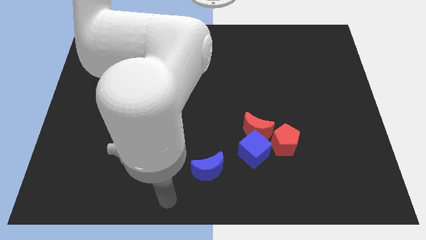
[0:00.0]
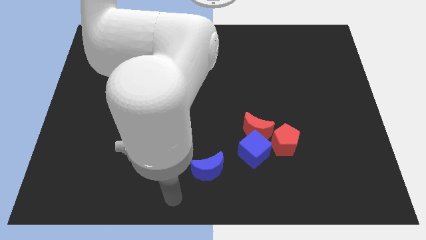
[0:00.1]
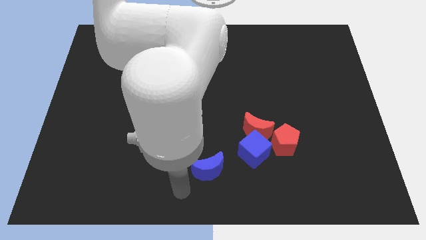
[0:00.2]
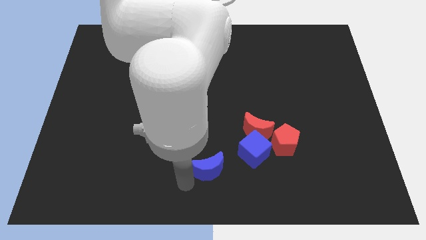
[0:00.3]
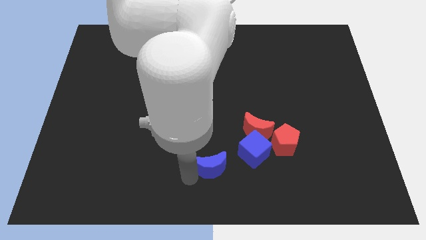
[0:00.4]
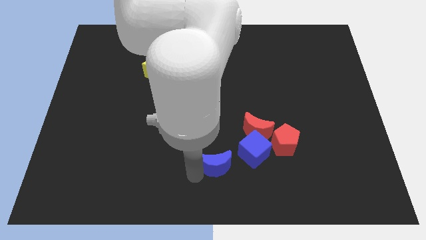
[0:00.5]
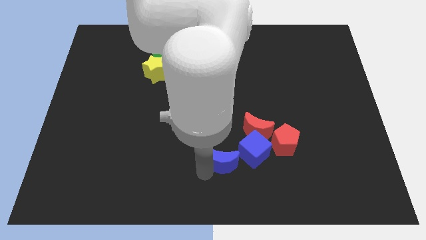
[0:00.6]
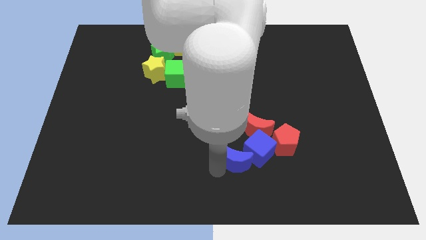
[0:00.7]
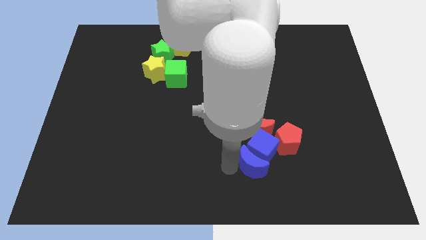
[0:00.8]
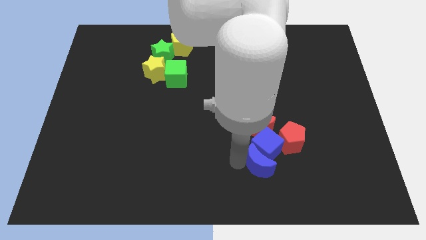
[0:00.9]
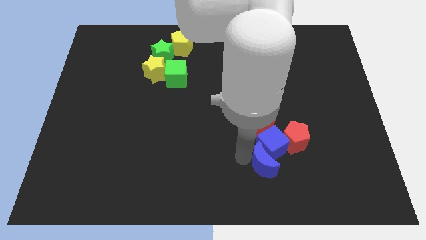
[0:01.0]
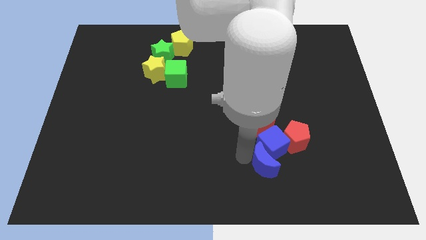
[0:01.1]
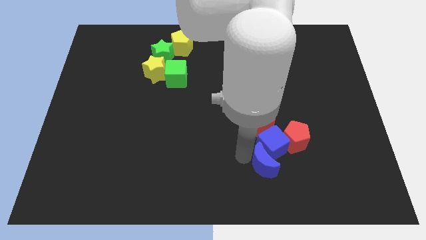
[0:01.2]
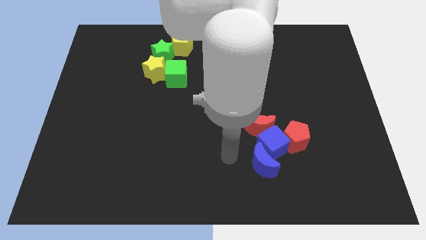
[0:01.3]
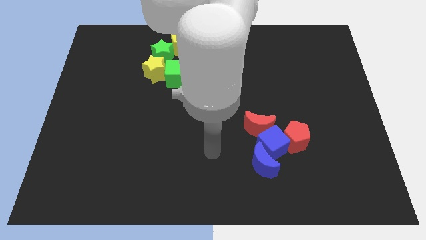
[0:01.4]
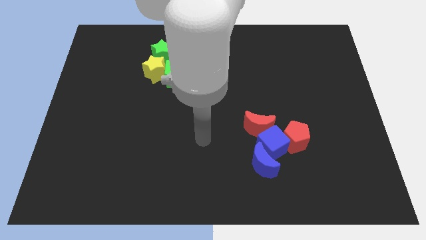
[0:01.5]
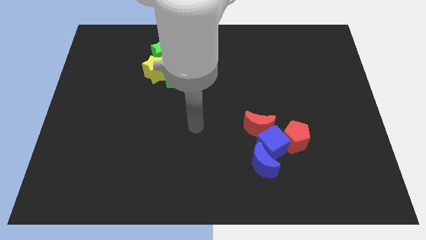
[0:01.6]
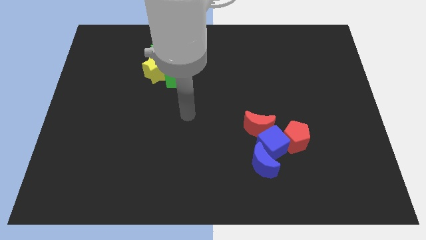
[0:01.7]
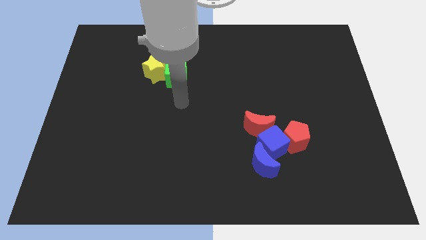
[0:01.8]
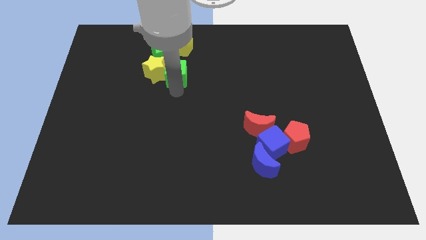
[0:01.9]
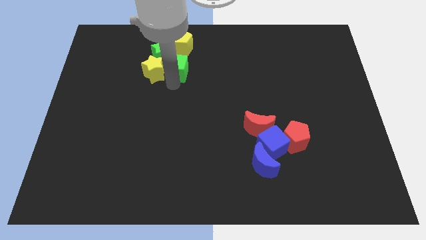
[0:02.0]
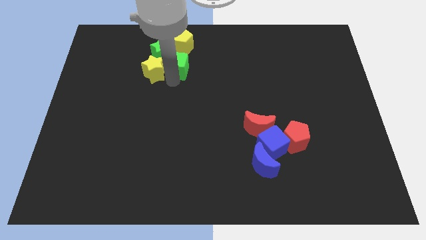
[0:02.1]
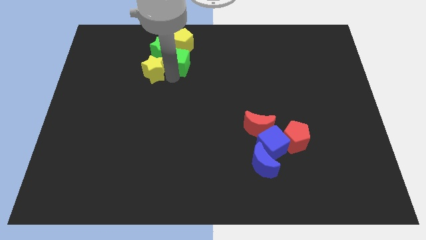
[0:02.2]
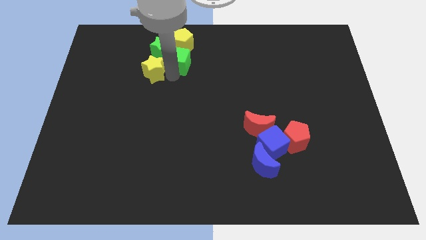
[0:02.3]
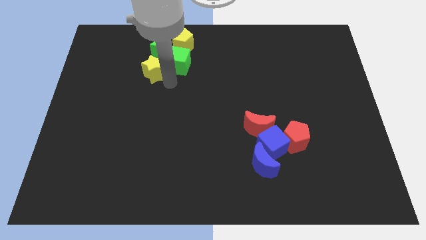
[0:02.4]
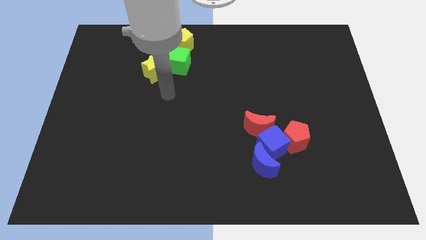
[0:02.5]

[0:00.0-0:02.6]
move the blue crescent below the blue cube

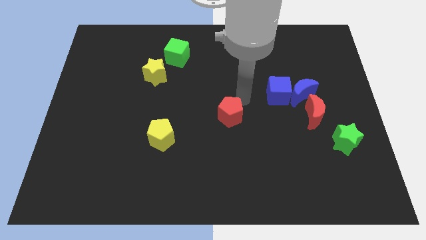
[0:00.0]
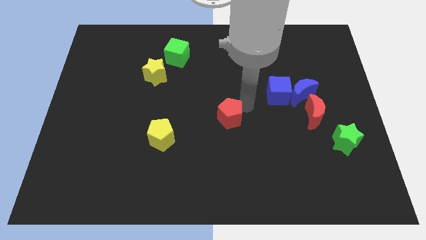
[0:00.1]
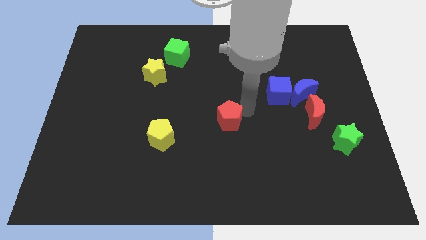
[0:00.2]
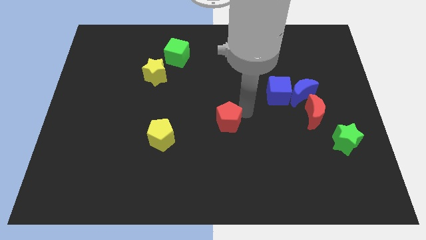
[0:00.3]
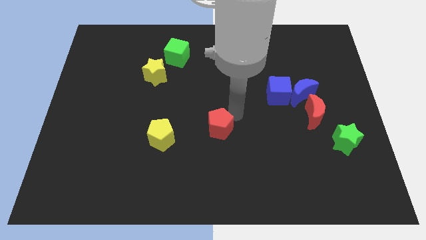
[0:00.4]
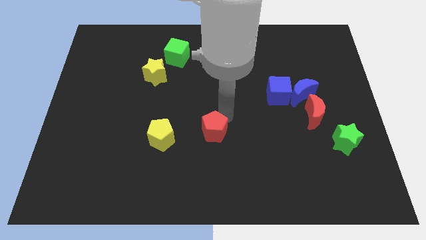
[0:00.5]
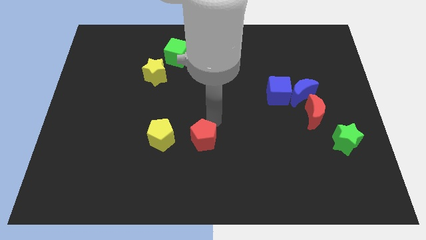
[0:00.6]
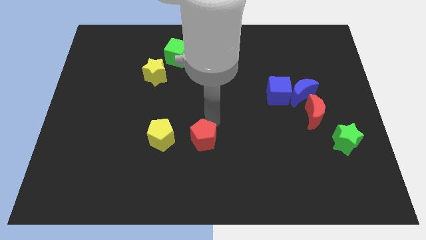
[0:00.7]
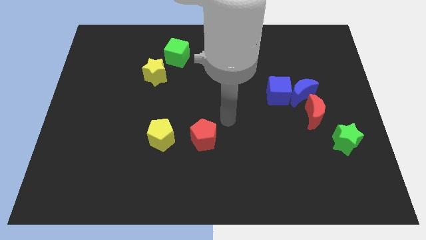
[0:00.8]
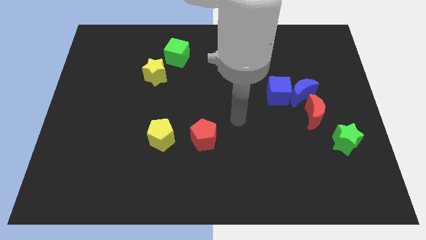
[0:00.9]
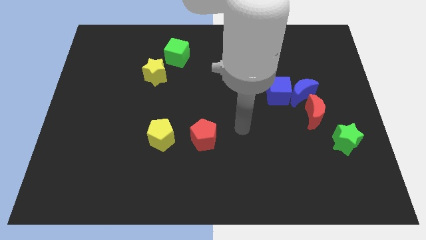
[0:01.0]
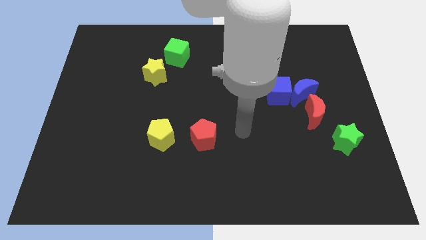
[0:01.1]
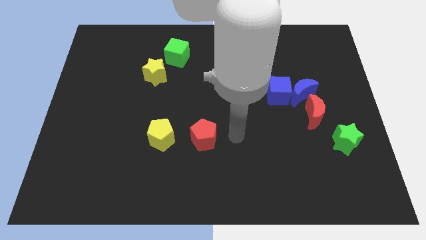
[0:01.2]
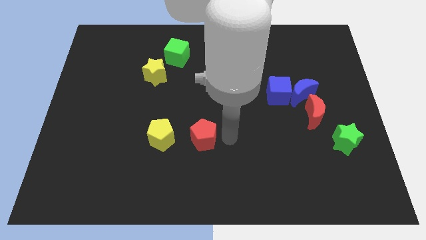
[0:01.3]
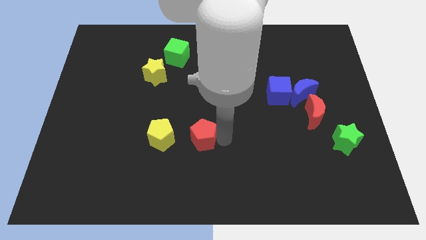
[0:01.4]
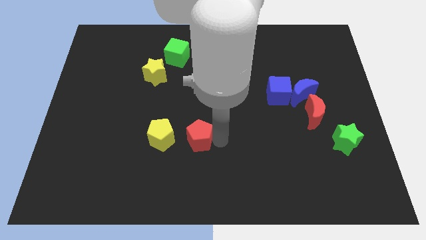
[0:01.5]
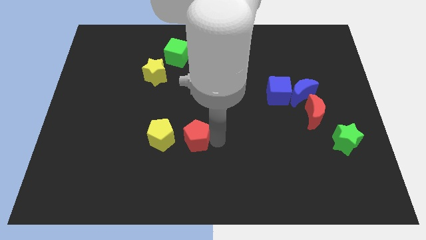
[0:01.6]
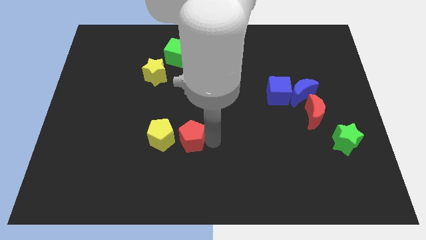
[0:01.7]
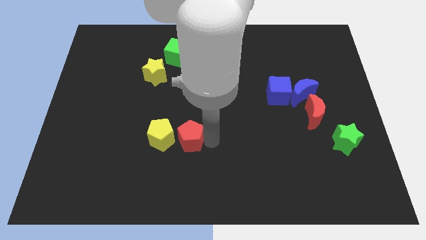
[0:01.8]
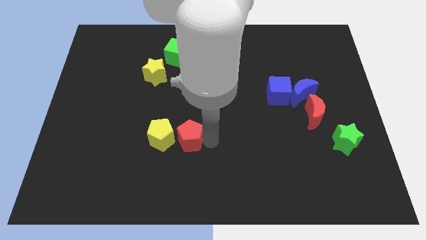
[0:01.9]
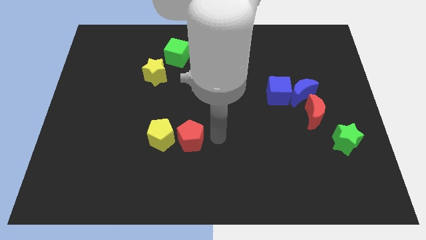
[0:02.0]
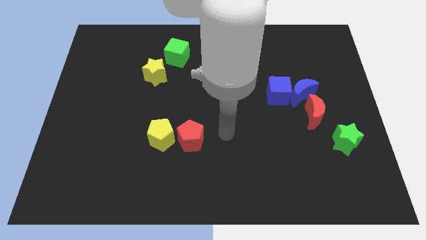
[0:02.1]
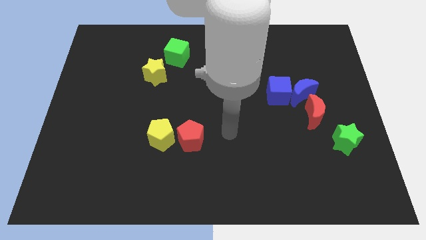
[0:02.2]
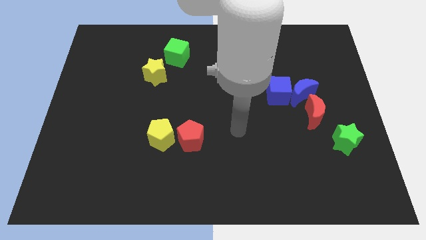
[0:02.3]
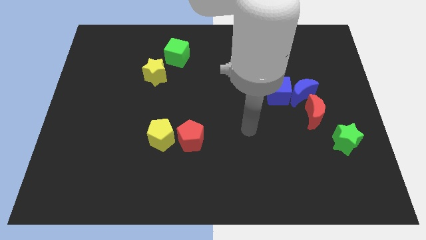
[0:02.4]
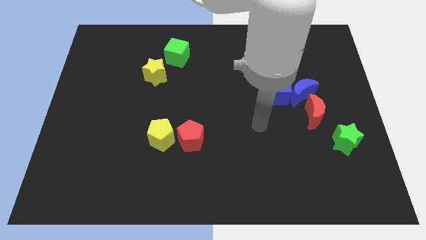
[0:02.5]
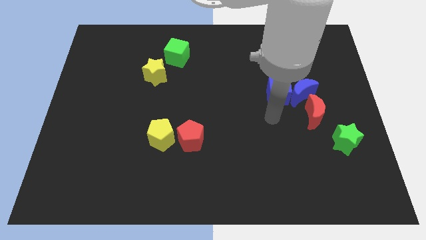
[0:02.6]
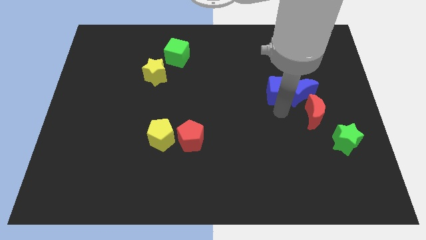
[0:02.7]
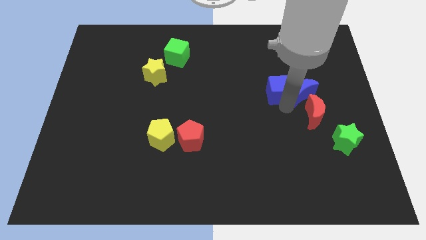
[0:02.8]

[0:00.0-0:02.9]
move the red pentagon close to the right of the yellow pentagon

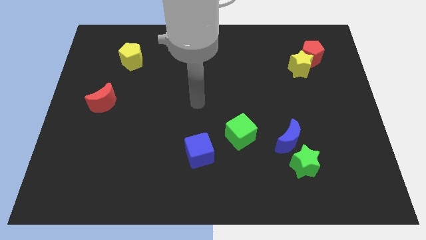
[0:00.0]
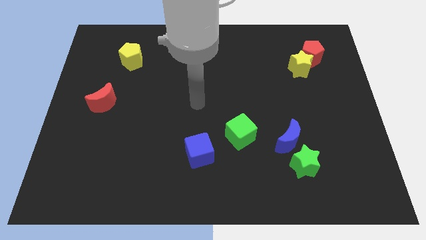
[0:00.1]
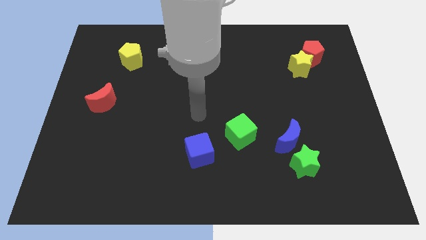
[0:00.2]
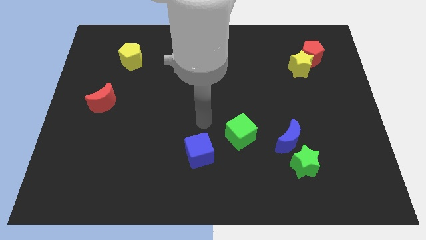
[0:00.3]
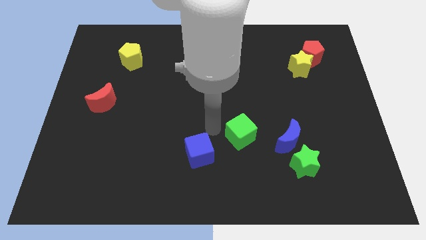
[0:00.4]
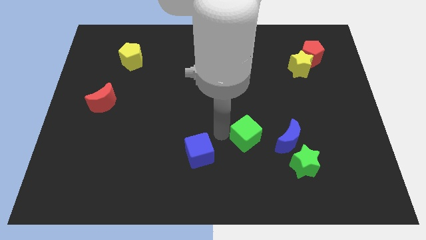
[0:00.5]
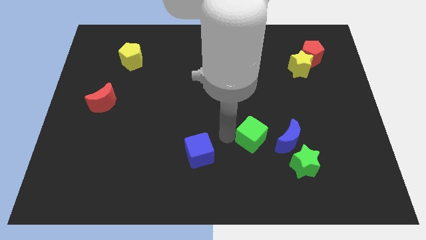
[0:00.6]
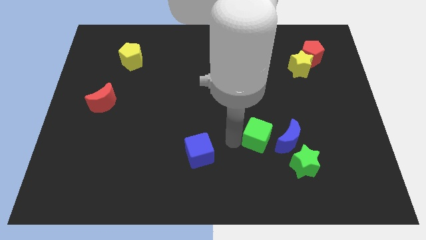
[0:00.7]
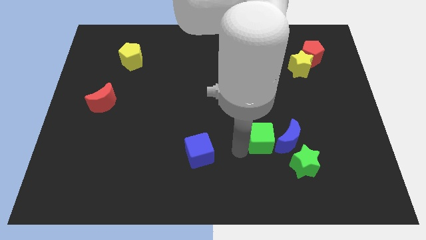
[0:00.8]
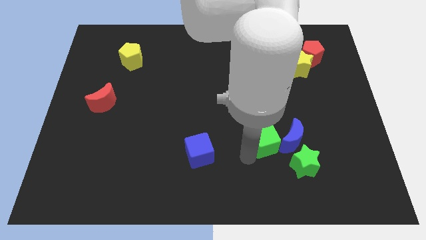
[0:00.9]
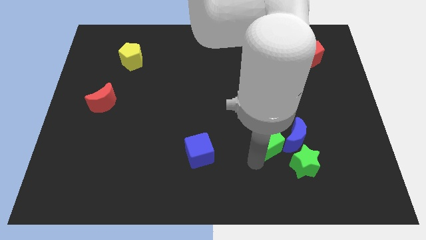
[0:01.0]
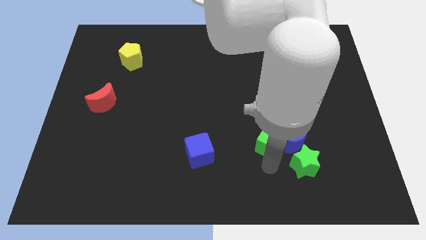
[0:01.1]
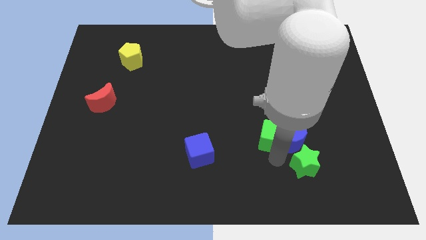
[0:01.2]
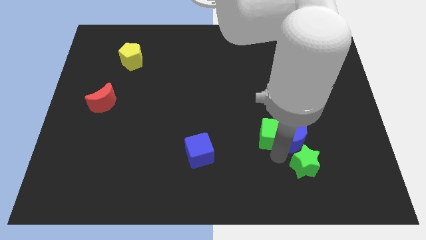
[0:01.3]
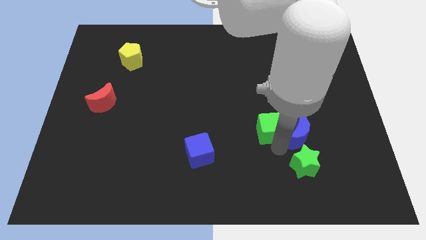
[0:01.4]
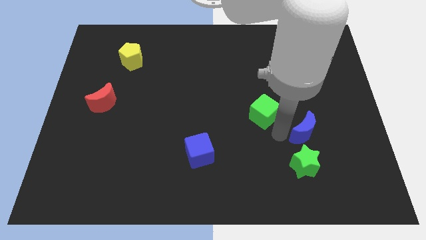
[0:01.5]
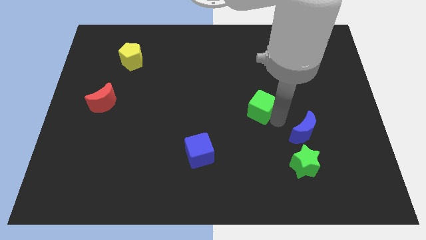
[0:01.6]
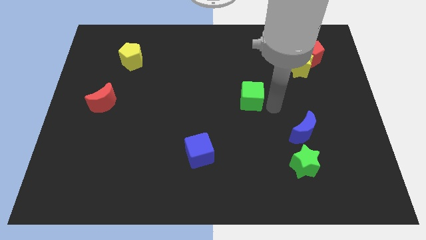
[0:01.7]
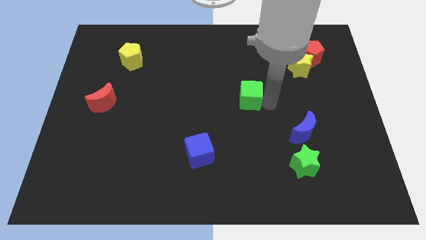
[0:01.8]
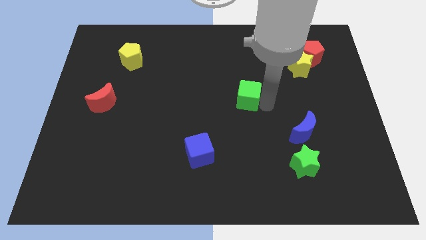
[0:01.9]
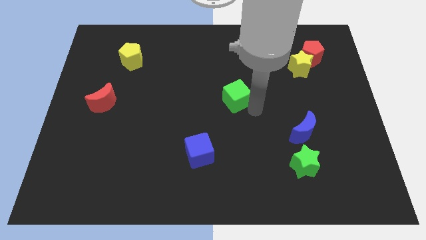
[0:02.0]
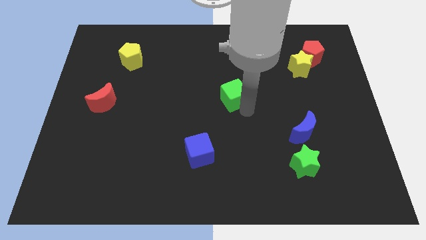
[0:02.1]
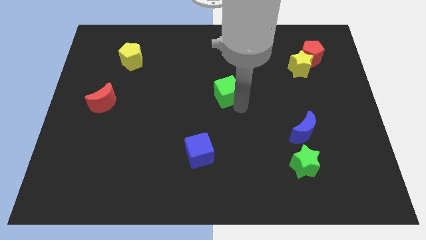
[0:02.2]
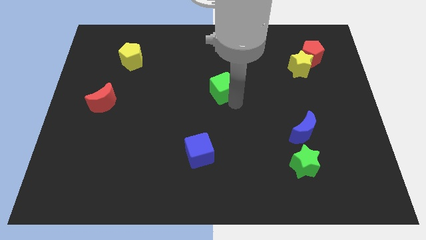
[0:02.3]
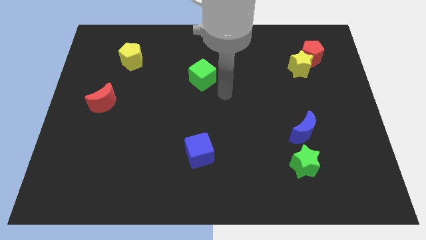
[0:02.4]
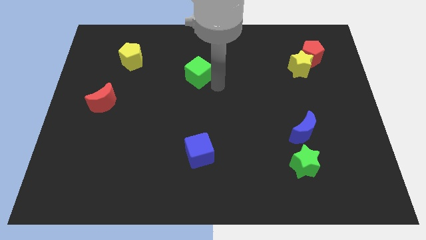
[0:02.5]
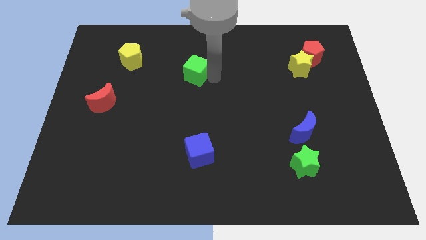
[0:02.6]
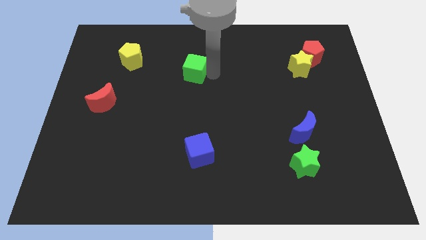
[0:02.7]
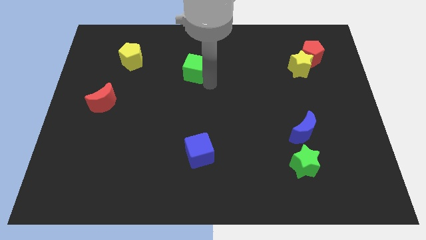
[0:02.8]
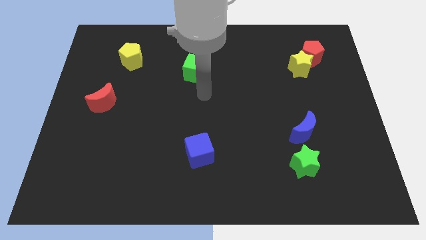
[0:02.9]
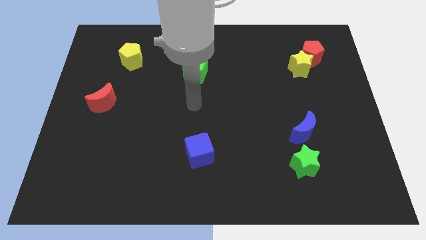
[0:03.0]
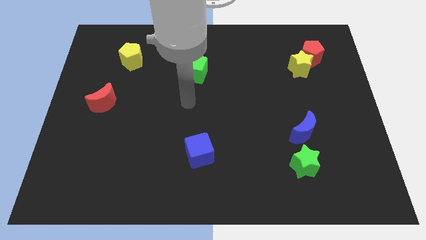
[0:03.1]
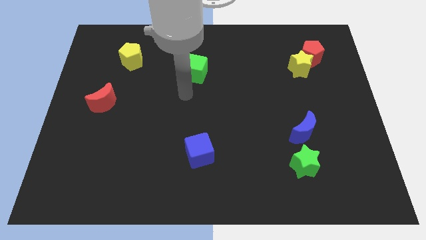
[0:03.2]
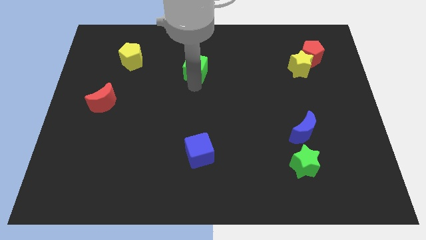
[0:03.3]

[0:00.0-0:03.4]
push the green cube slightly towards up
